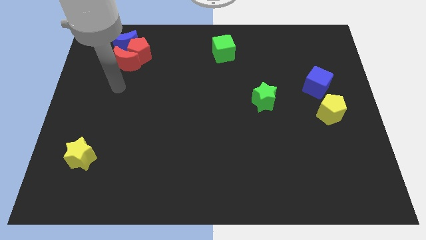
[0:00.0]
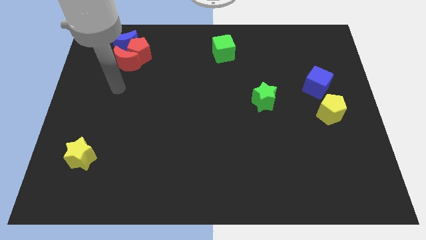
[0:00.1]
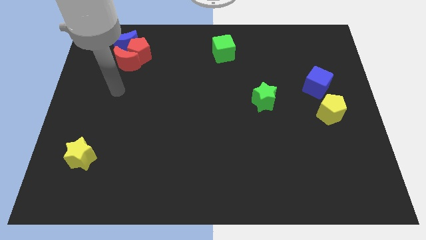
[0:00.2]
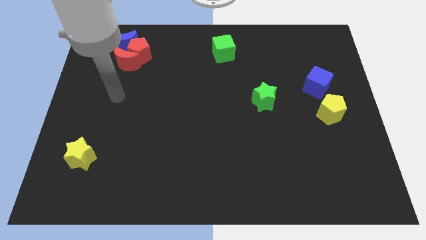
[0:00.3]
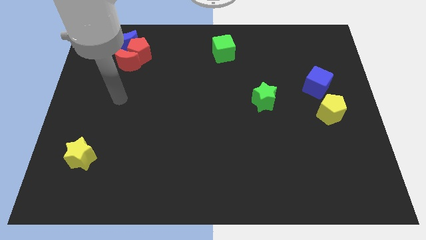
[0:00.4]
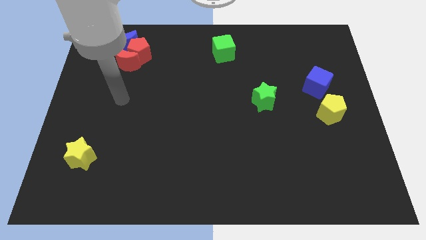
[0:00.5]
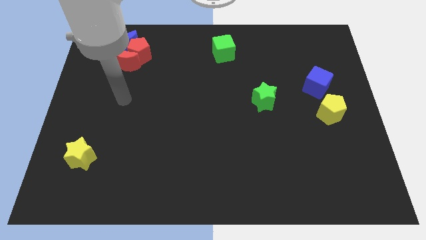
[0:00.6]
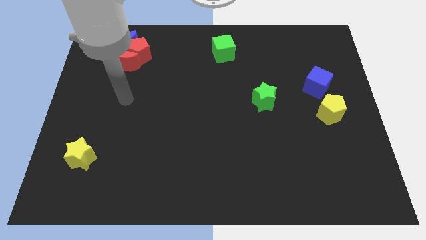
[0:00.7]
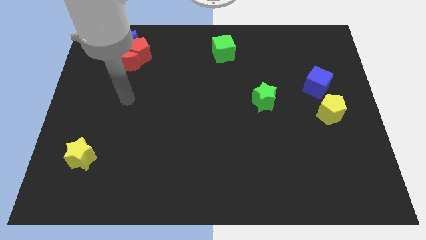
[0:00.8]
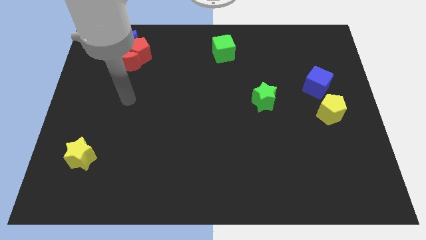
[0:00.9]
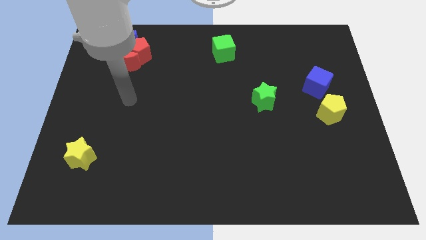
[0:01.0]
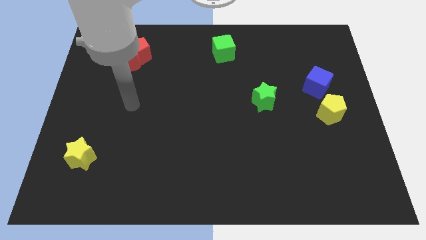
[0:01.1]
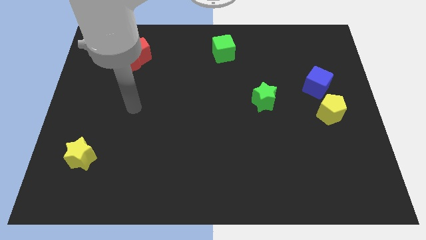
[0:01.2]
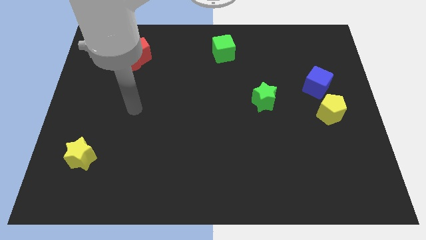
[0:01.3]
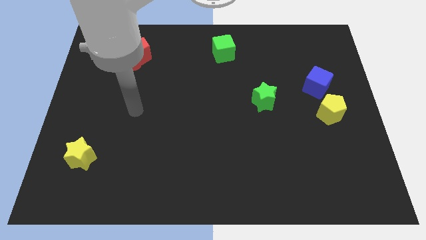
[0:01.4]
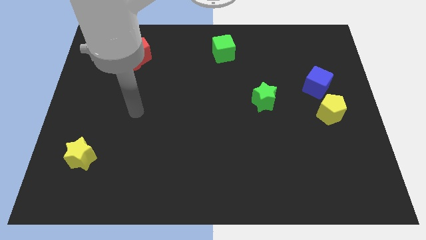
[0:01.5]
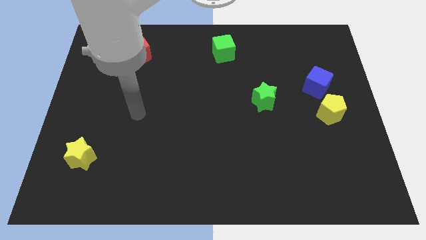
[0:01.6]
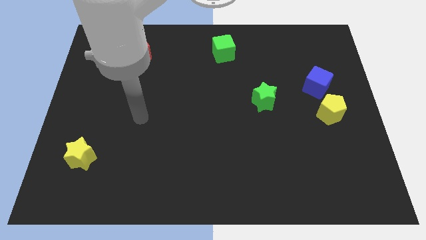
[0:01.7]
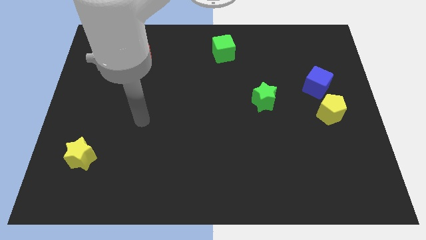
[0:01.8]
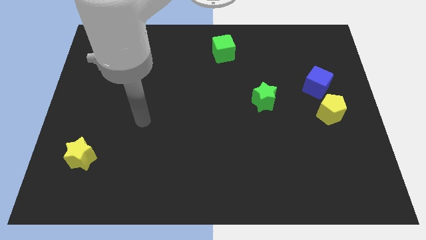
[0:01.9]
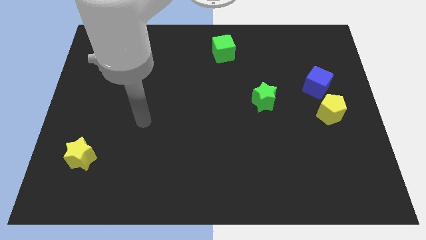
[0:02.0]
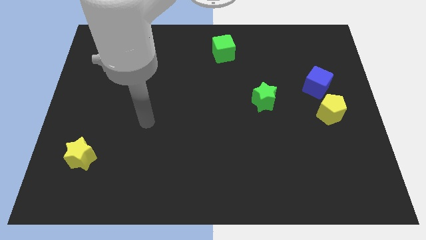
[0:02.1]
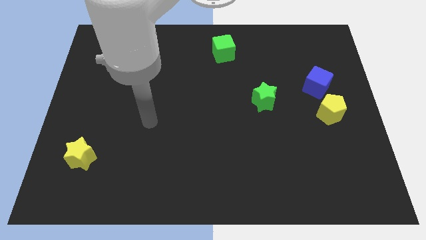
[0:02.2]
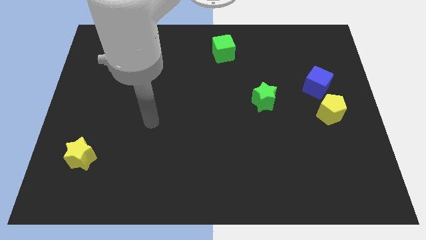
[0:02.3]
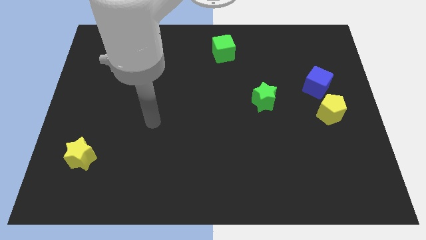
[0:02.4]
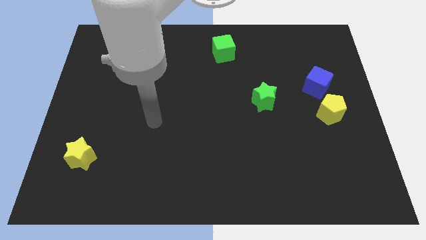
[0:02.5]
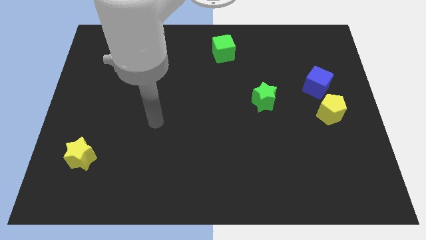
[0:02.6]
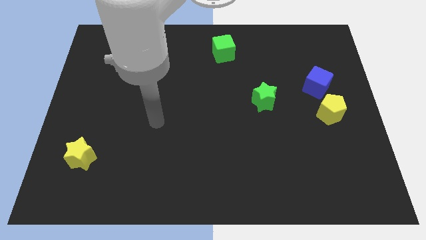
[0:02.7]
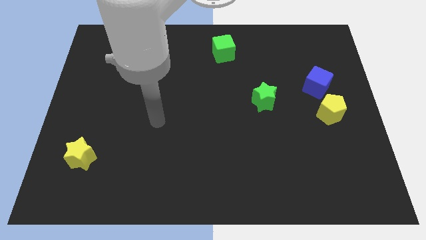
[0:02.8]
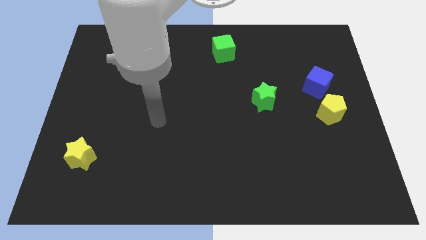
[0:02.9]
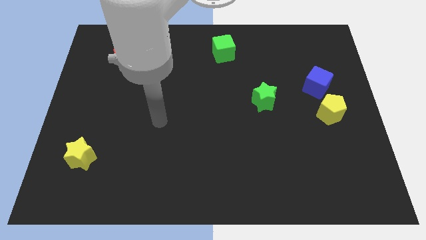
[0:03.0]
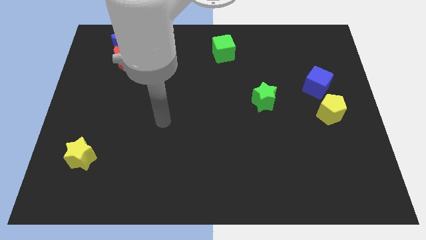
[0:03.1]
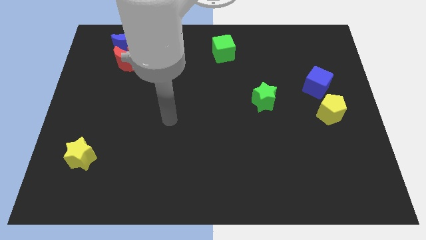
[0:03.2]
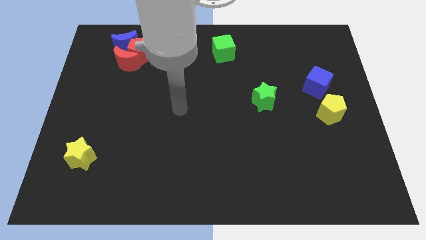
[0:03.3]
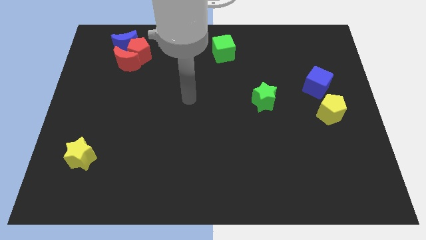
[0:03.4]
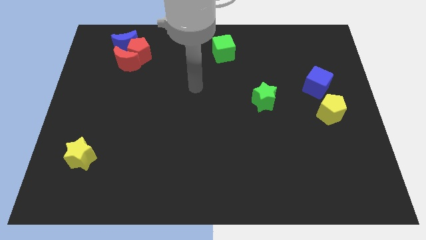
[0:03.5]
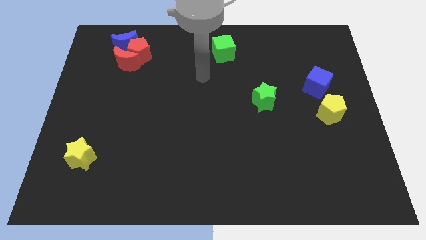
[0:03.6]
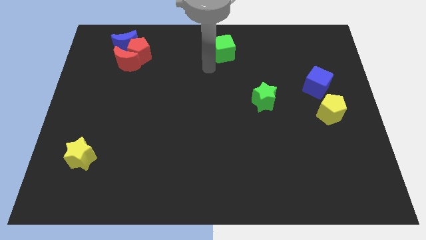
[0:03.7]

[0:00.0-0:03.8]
move the arm towards the green cube

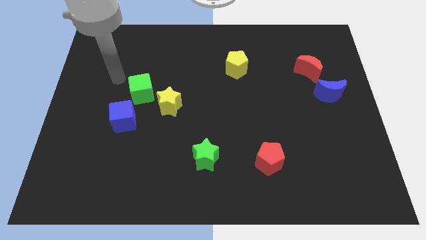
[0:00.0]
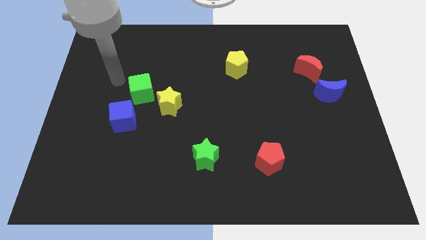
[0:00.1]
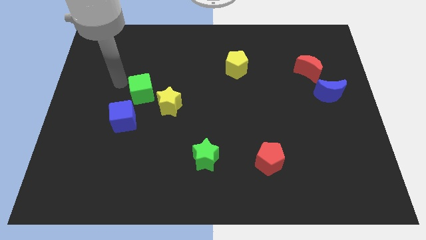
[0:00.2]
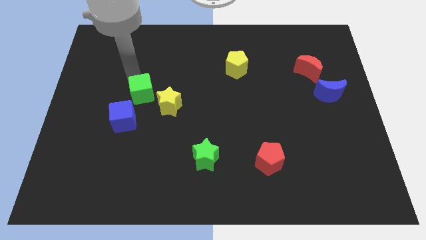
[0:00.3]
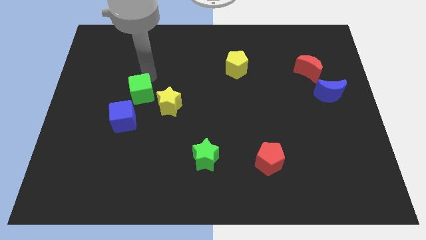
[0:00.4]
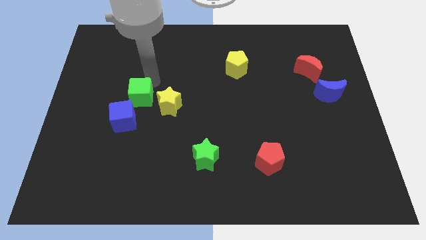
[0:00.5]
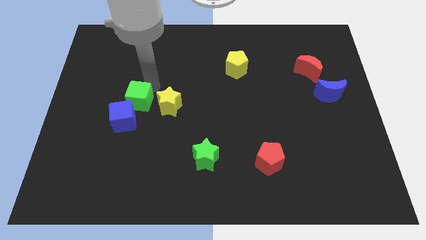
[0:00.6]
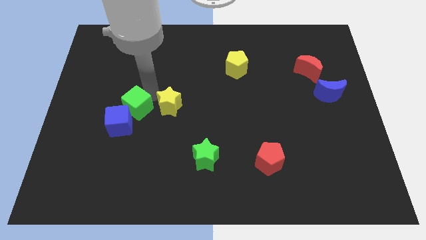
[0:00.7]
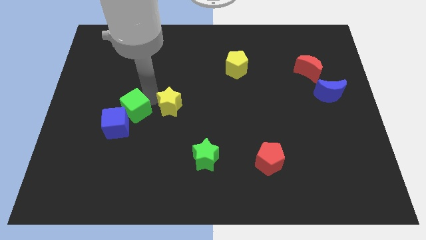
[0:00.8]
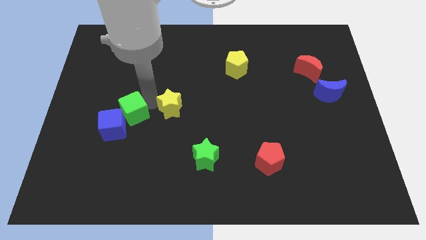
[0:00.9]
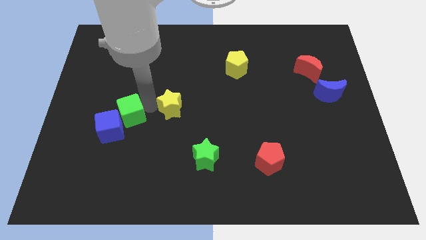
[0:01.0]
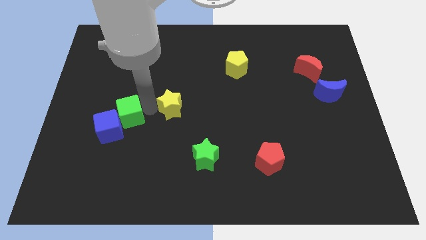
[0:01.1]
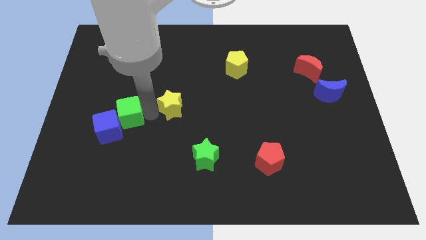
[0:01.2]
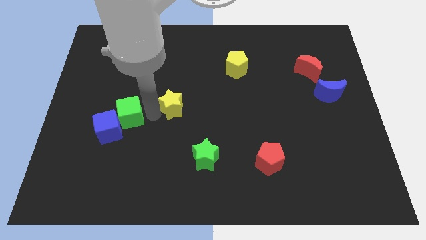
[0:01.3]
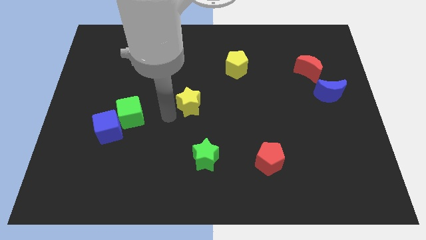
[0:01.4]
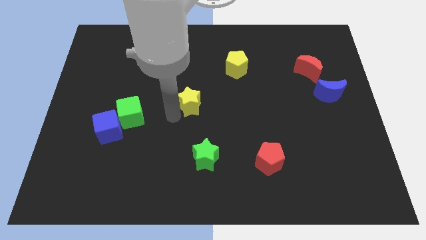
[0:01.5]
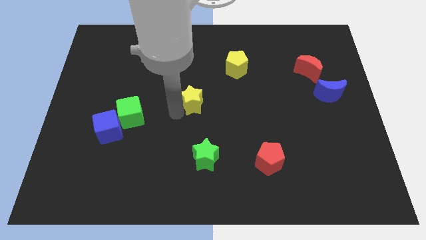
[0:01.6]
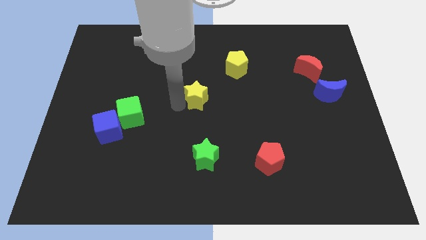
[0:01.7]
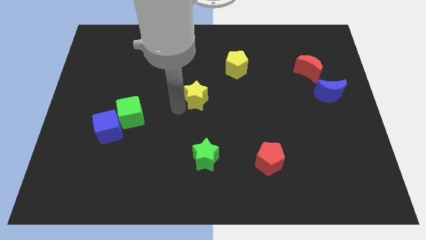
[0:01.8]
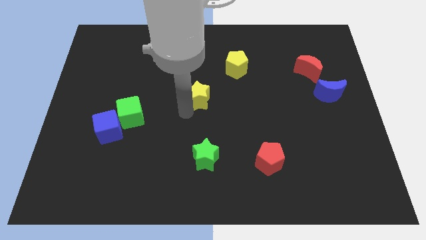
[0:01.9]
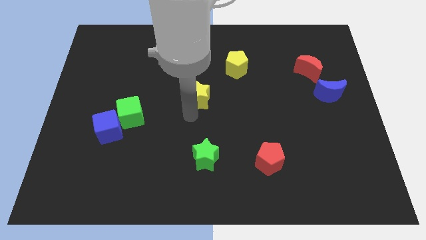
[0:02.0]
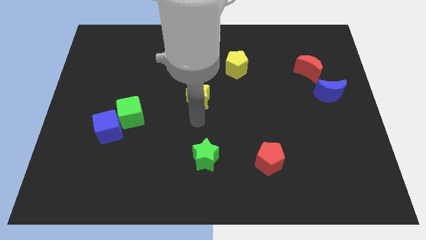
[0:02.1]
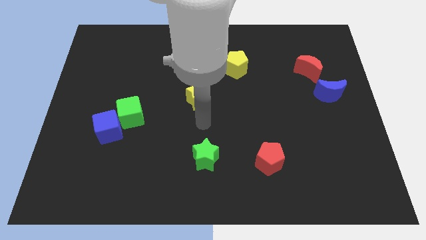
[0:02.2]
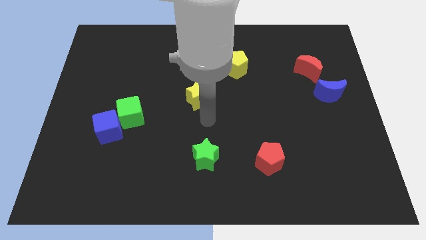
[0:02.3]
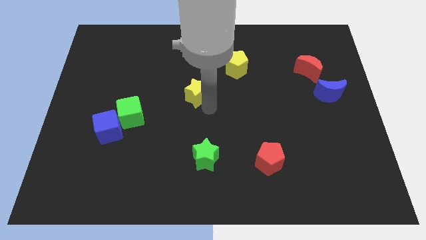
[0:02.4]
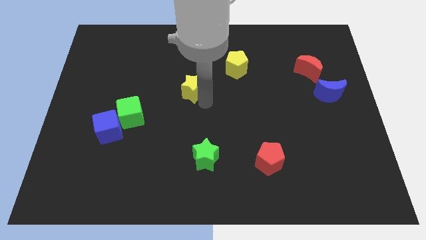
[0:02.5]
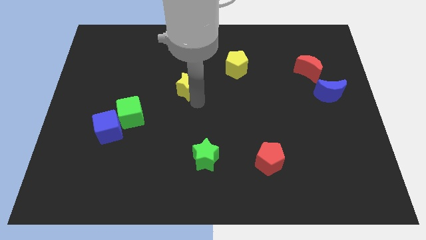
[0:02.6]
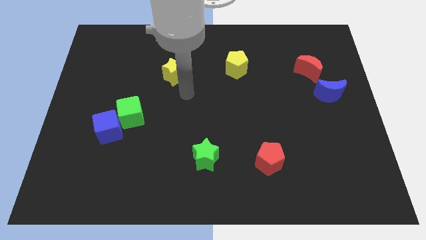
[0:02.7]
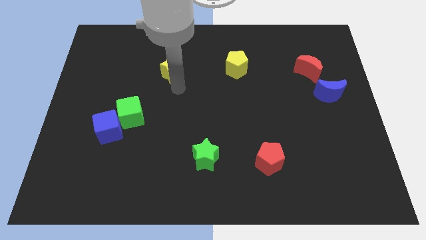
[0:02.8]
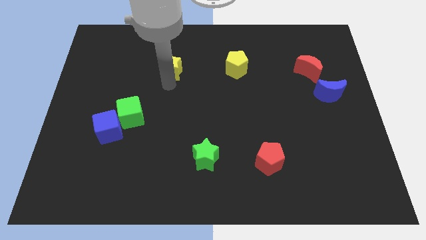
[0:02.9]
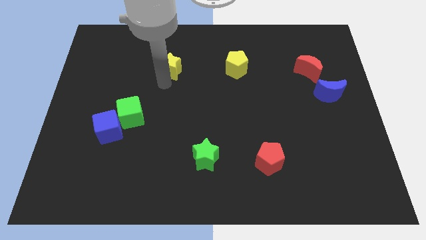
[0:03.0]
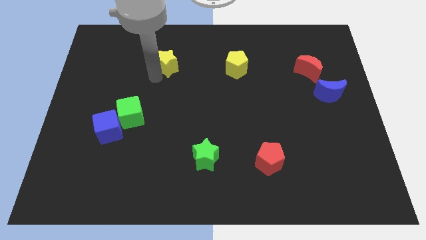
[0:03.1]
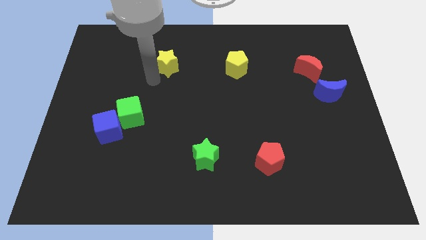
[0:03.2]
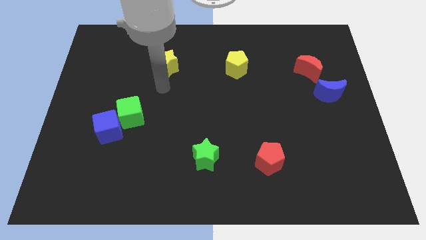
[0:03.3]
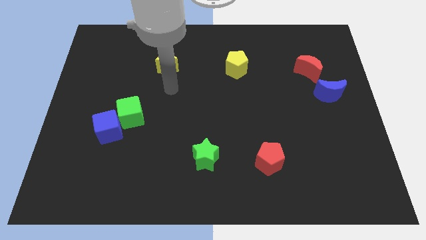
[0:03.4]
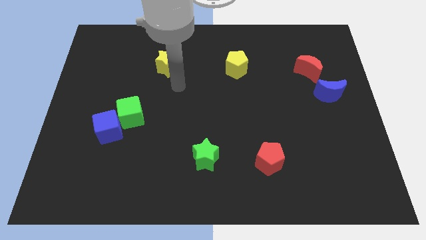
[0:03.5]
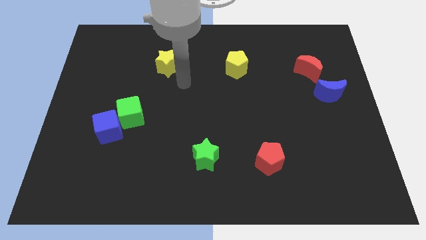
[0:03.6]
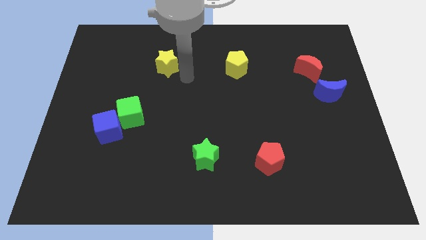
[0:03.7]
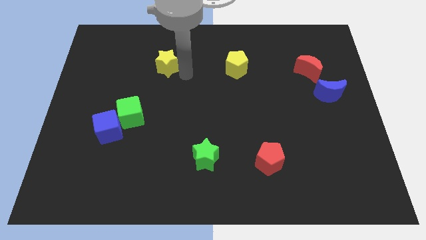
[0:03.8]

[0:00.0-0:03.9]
place the yellow star parallel to the yellow pentagon

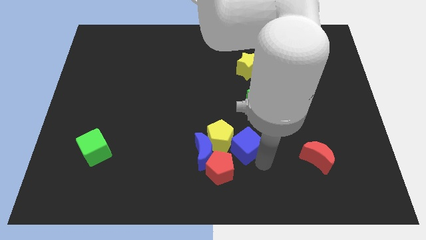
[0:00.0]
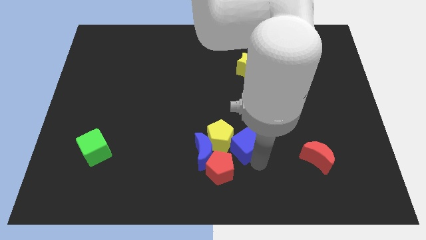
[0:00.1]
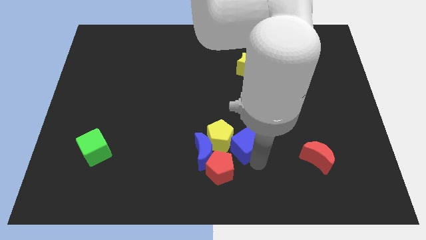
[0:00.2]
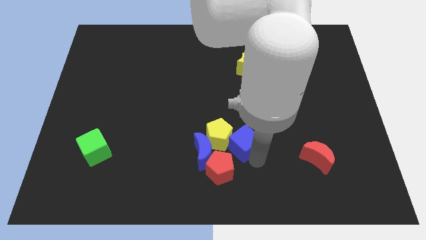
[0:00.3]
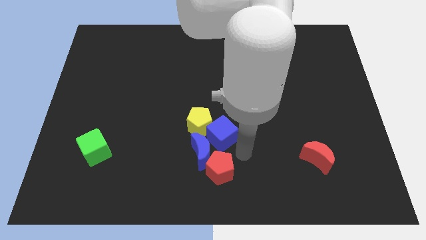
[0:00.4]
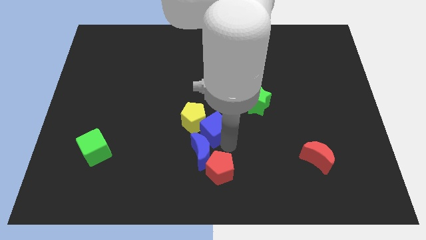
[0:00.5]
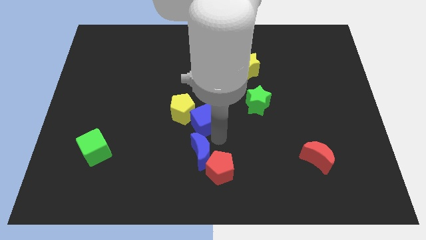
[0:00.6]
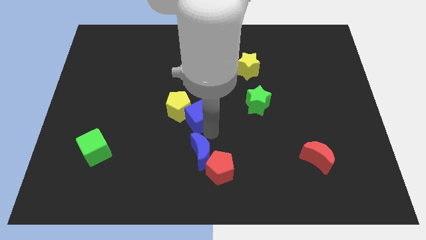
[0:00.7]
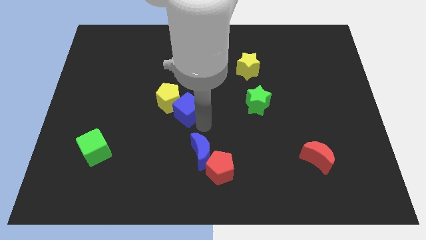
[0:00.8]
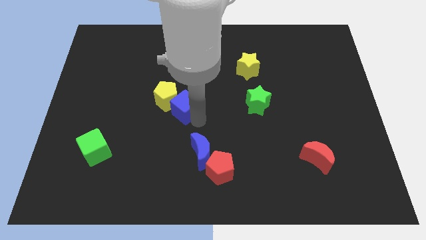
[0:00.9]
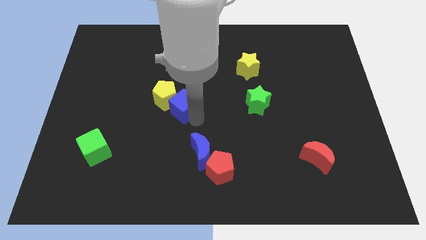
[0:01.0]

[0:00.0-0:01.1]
move the blue cube along with the yellow pentagon towards the left top of the board

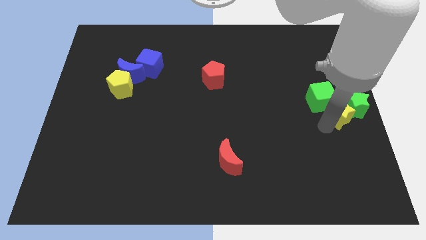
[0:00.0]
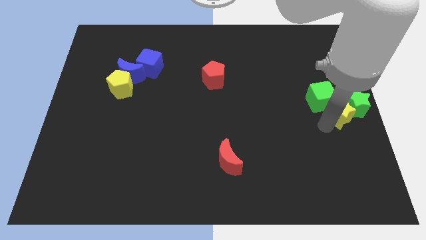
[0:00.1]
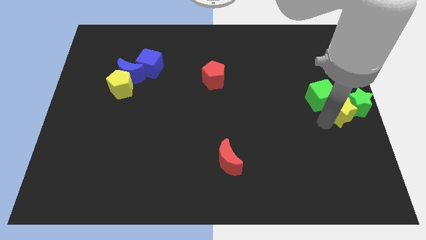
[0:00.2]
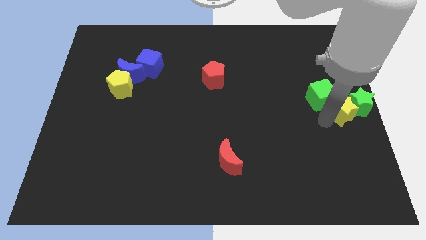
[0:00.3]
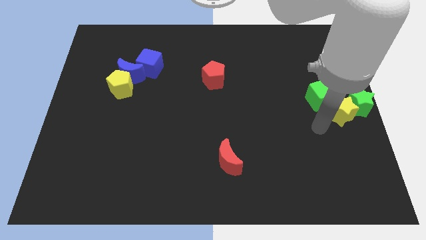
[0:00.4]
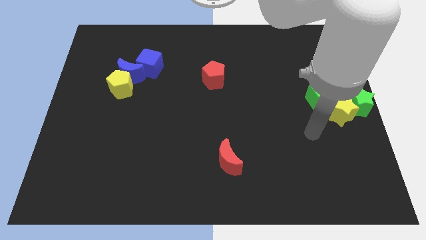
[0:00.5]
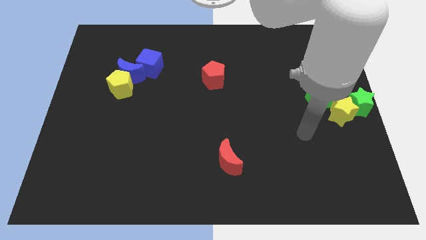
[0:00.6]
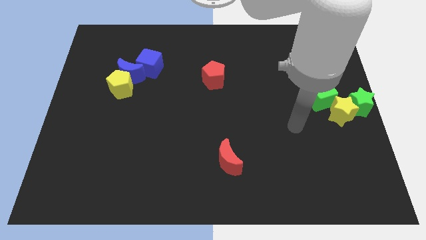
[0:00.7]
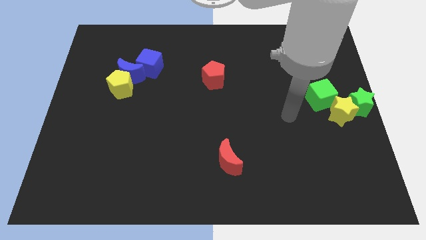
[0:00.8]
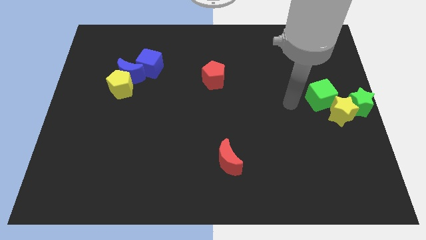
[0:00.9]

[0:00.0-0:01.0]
adjust the yellow star in between the green star and green cube from the bottom
